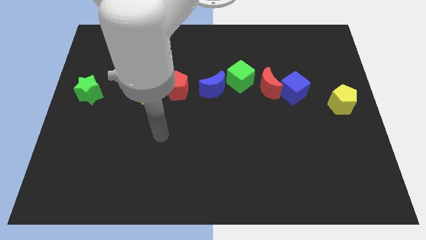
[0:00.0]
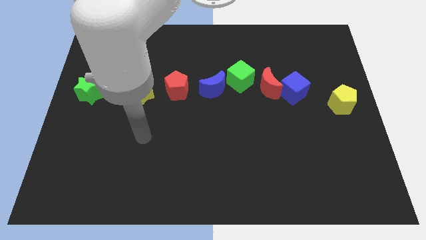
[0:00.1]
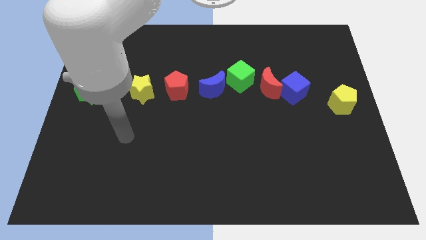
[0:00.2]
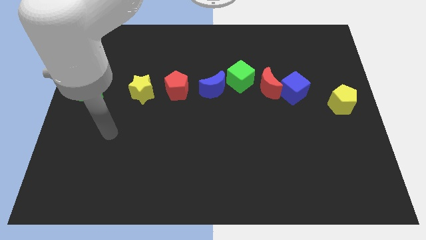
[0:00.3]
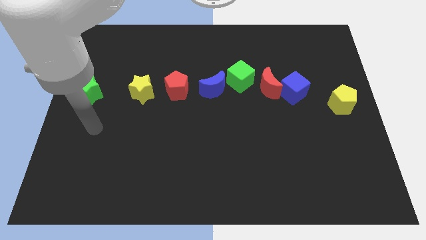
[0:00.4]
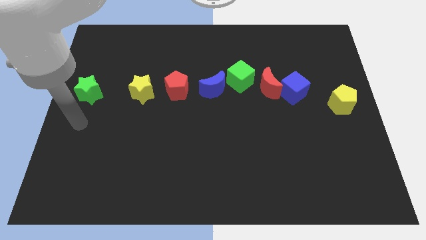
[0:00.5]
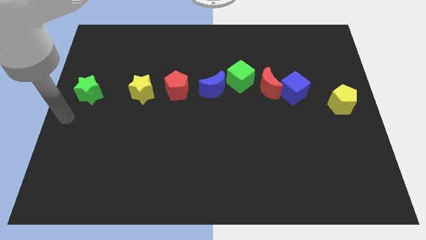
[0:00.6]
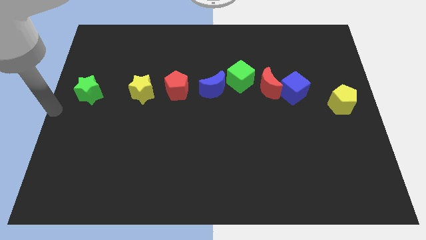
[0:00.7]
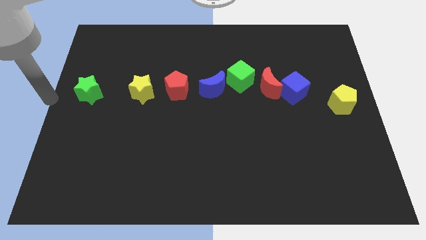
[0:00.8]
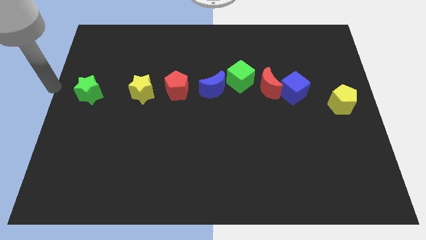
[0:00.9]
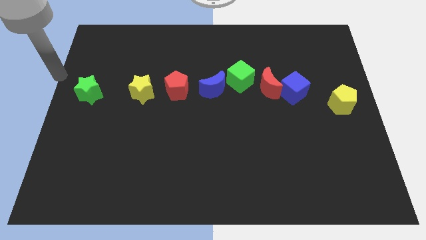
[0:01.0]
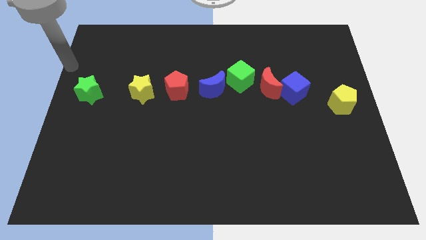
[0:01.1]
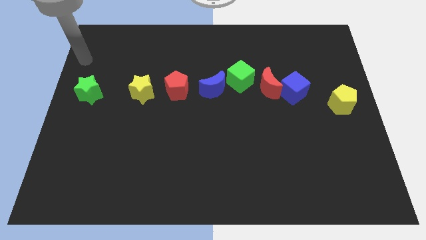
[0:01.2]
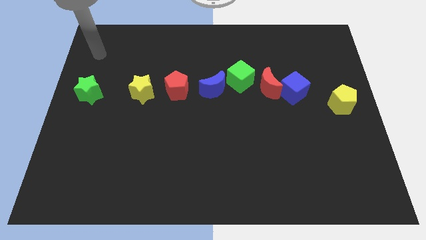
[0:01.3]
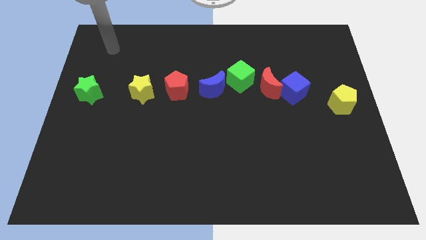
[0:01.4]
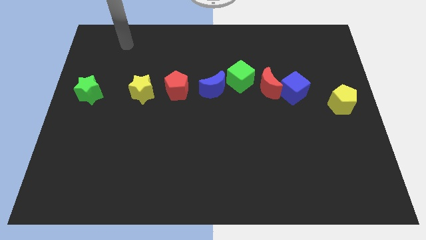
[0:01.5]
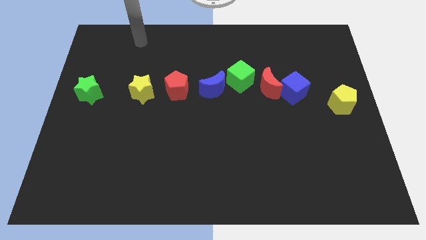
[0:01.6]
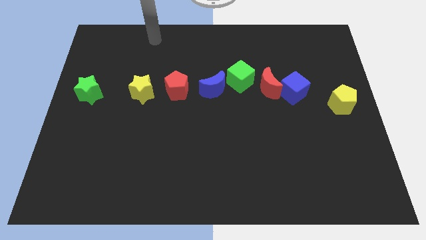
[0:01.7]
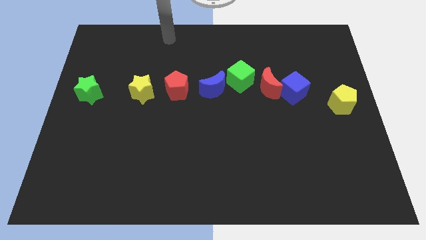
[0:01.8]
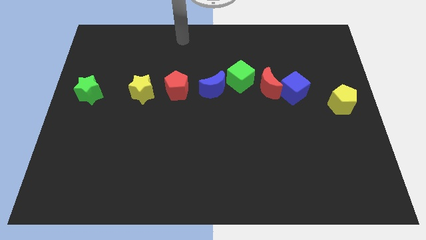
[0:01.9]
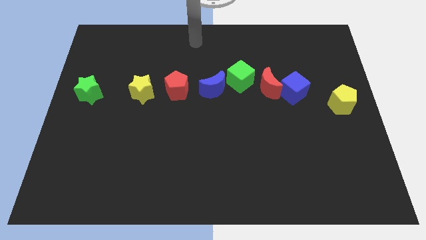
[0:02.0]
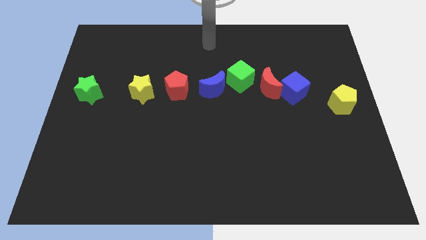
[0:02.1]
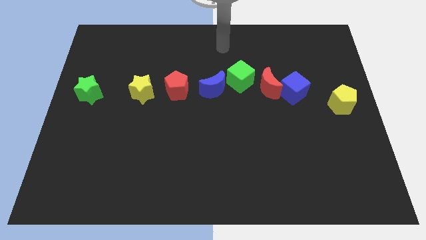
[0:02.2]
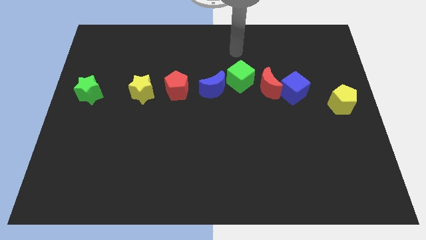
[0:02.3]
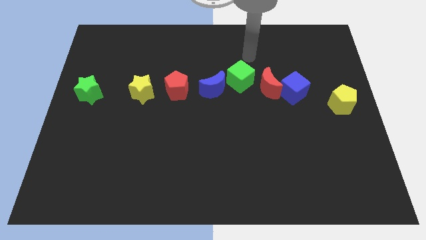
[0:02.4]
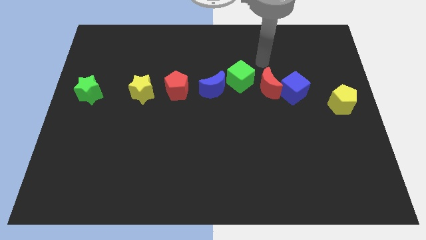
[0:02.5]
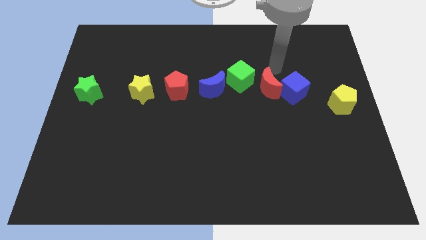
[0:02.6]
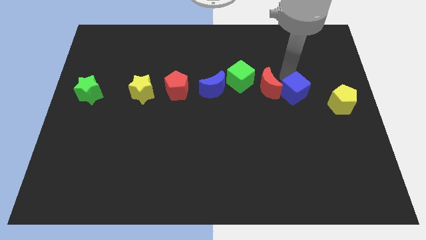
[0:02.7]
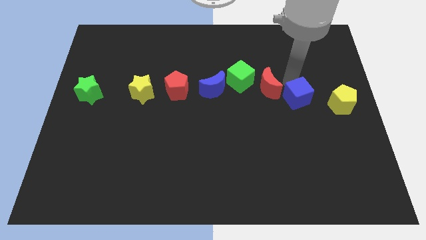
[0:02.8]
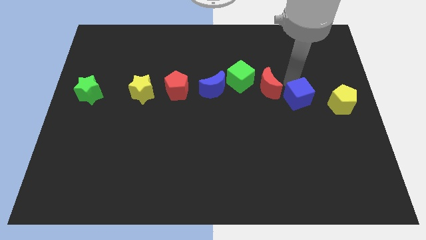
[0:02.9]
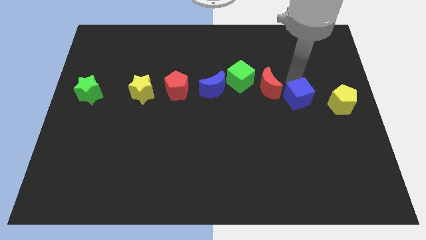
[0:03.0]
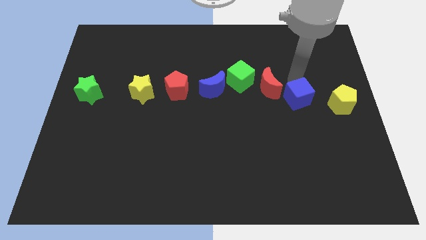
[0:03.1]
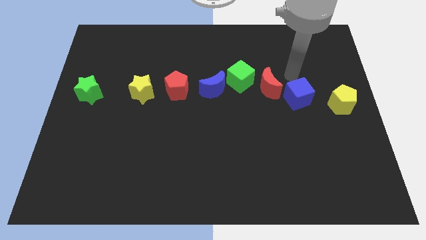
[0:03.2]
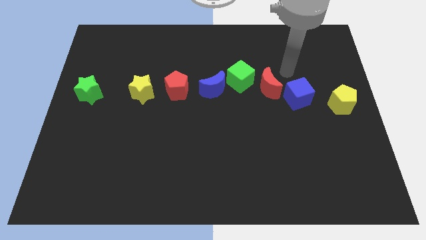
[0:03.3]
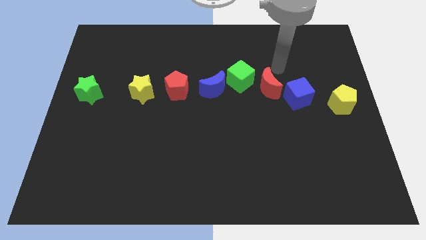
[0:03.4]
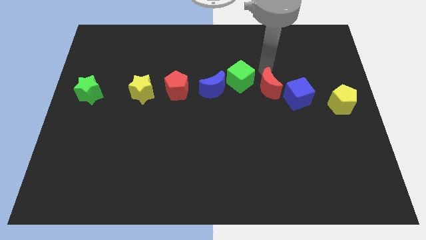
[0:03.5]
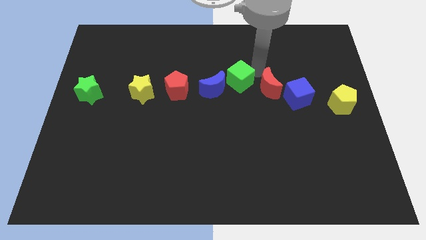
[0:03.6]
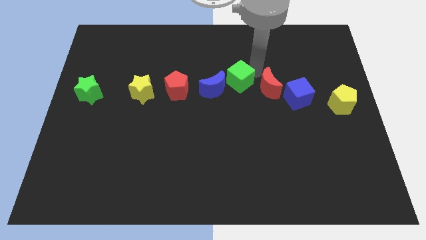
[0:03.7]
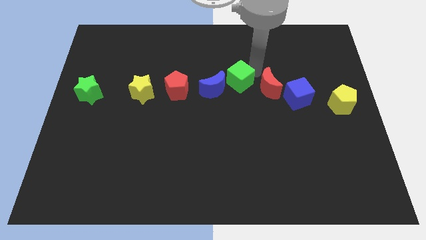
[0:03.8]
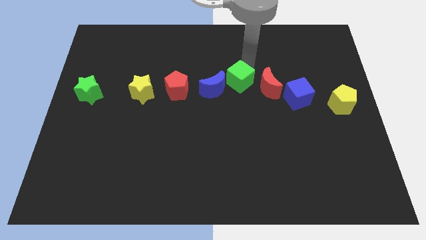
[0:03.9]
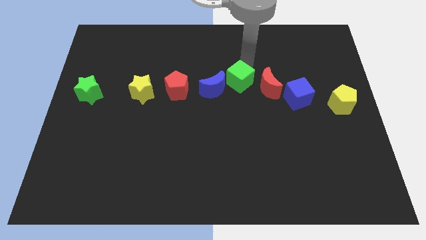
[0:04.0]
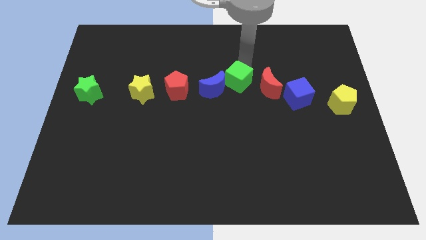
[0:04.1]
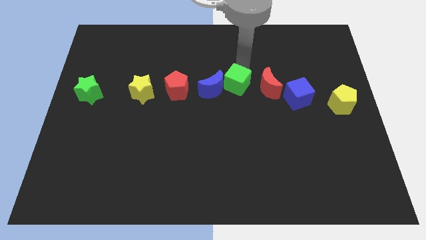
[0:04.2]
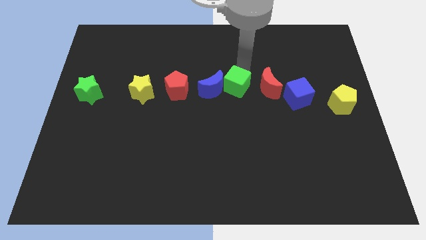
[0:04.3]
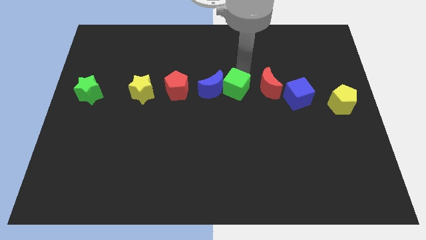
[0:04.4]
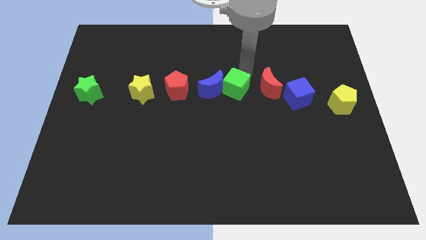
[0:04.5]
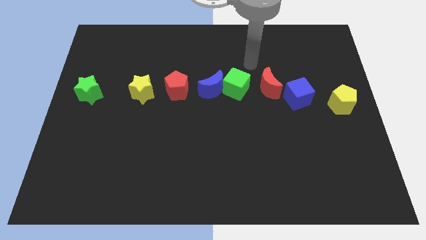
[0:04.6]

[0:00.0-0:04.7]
put all the blocks in a horizontal line

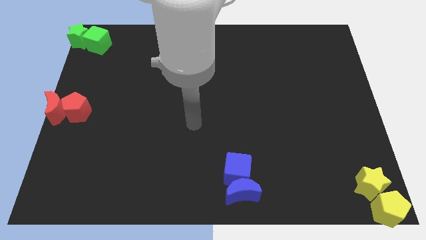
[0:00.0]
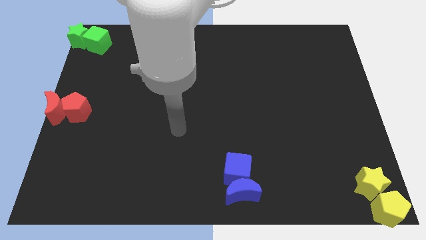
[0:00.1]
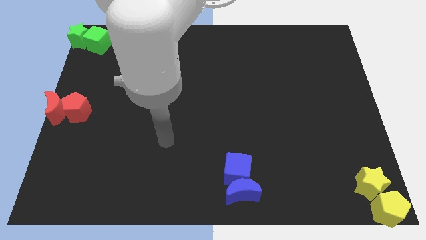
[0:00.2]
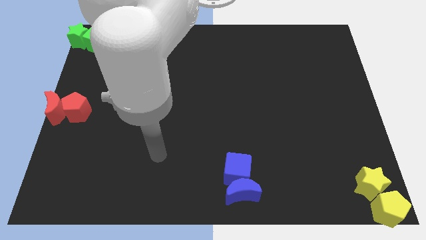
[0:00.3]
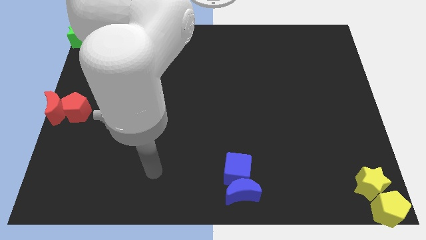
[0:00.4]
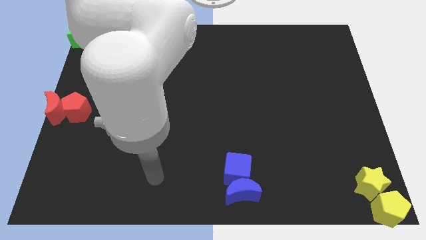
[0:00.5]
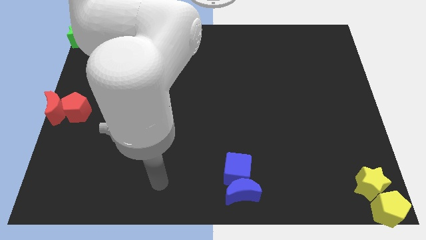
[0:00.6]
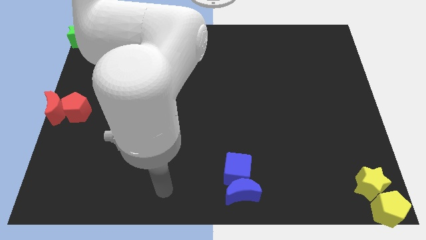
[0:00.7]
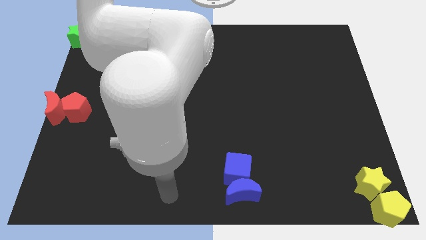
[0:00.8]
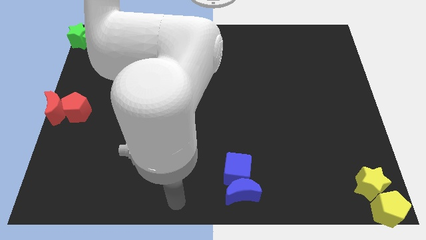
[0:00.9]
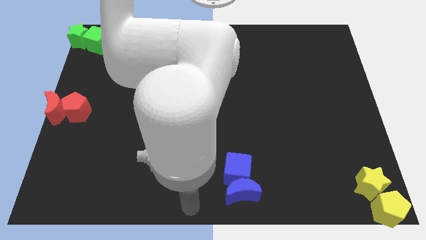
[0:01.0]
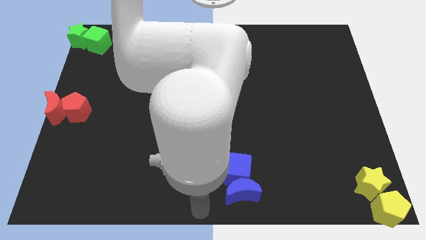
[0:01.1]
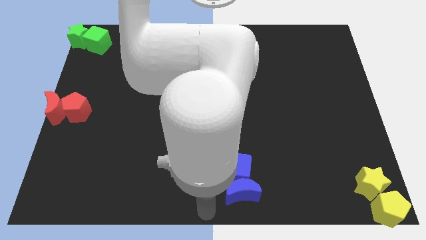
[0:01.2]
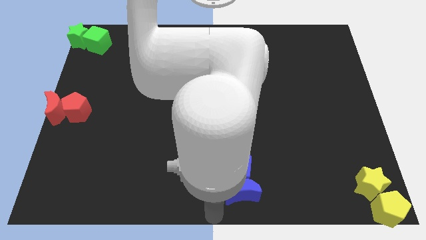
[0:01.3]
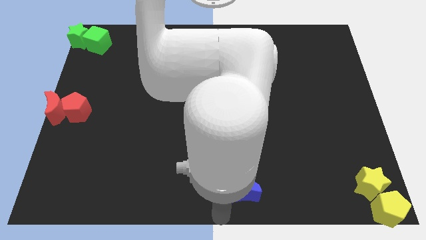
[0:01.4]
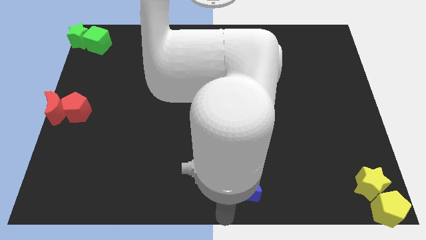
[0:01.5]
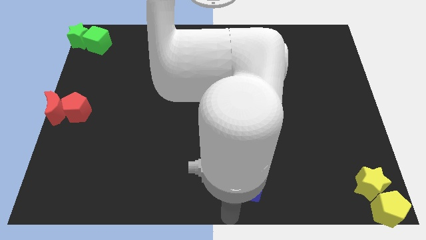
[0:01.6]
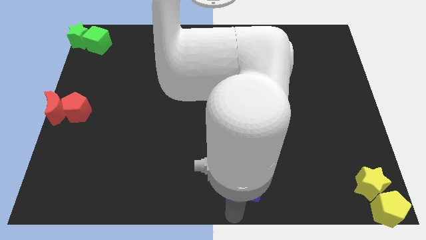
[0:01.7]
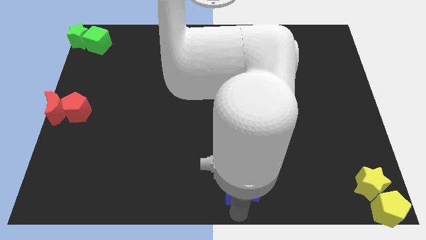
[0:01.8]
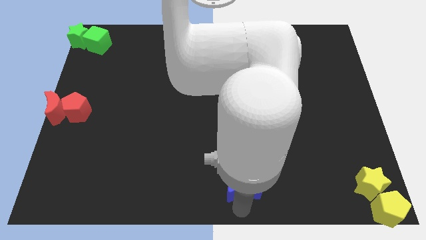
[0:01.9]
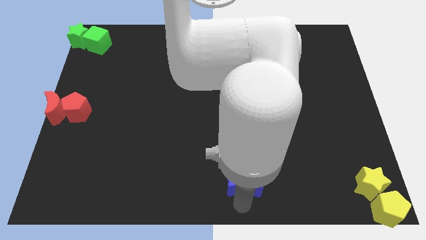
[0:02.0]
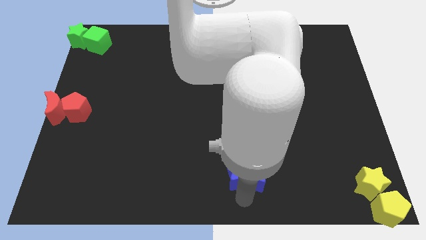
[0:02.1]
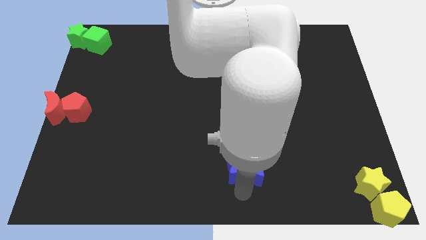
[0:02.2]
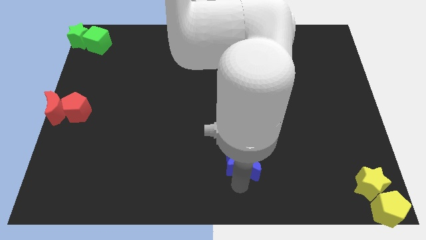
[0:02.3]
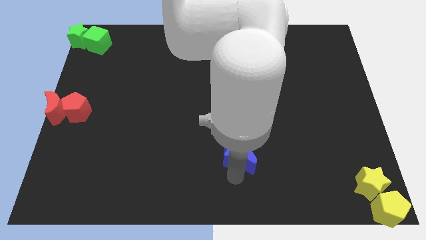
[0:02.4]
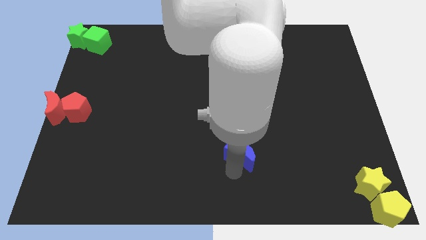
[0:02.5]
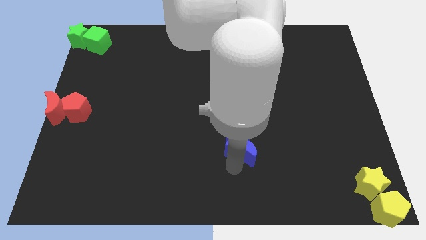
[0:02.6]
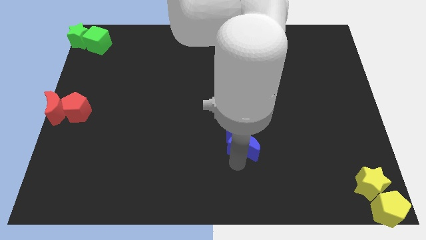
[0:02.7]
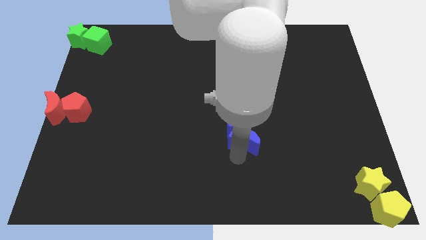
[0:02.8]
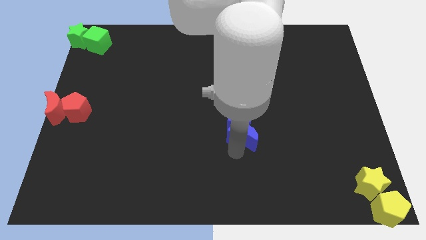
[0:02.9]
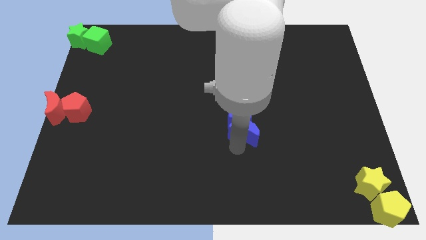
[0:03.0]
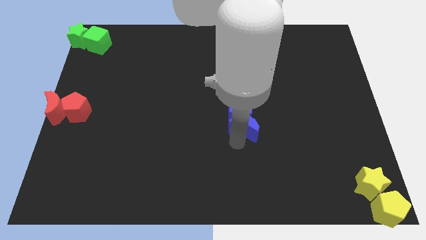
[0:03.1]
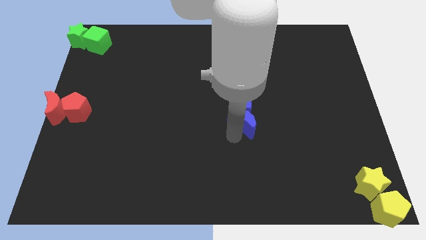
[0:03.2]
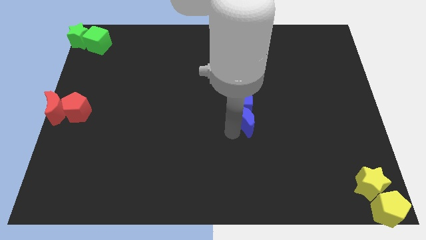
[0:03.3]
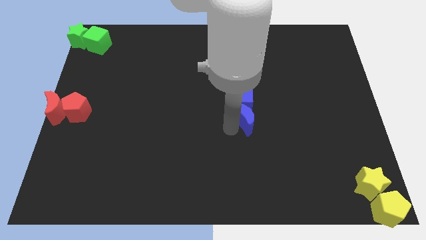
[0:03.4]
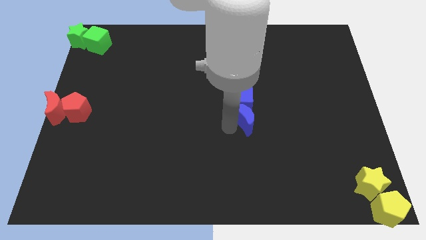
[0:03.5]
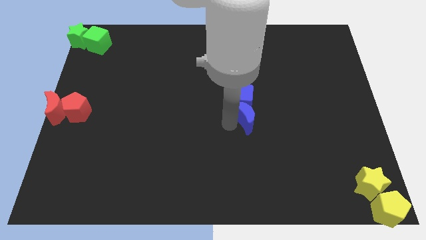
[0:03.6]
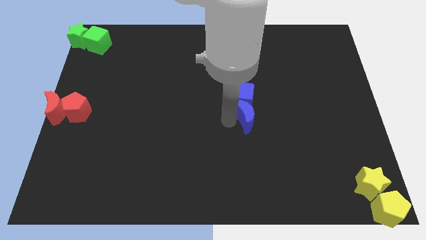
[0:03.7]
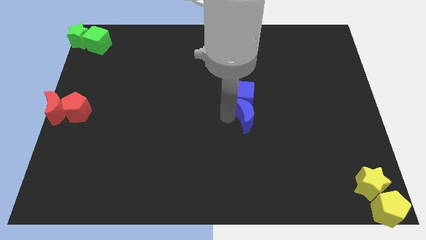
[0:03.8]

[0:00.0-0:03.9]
push the blue moon to the center of board

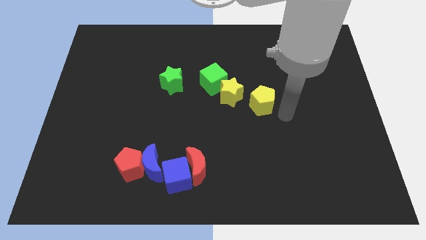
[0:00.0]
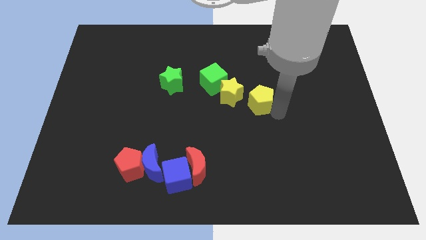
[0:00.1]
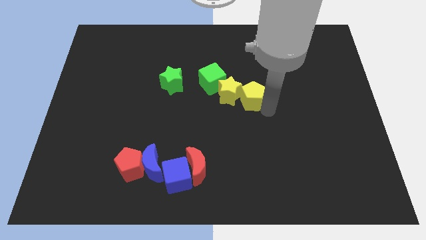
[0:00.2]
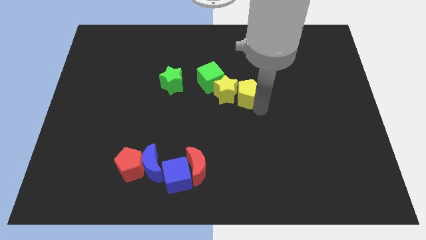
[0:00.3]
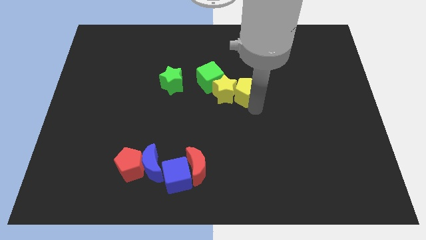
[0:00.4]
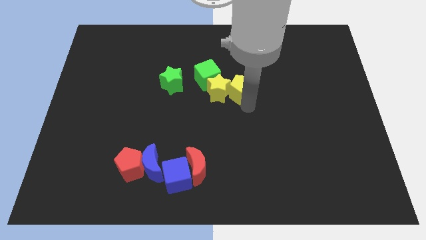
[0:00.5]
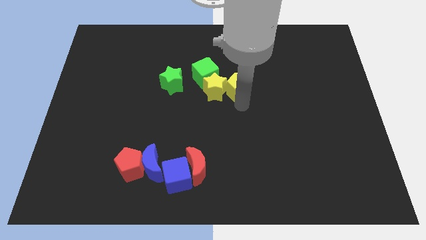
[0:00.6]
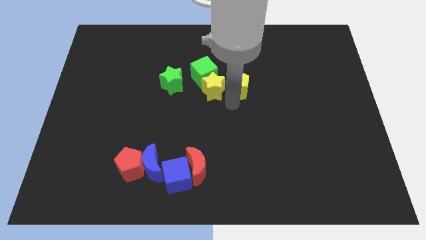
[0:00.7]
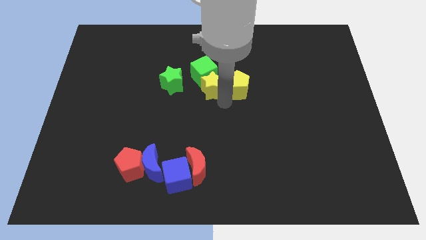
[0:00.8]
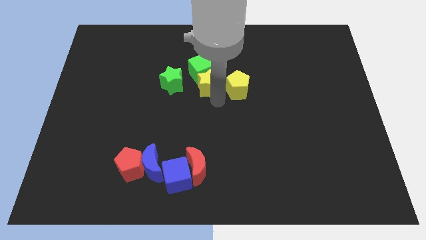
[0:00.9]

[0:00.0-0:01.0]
push yellow pentagon near yellow star
